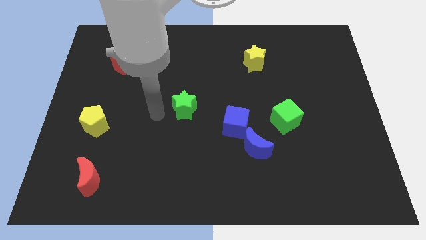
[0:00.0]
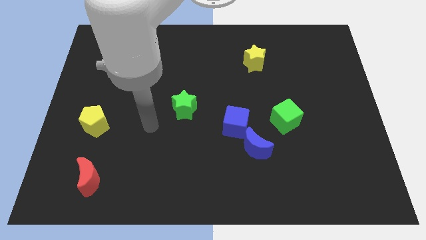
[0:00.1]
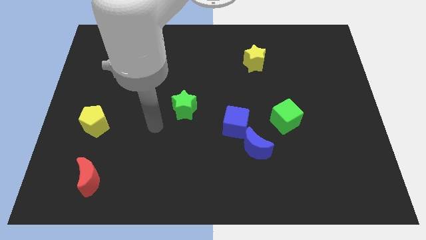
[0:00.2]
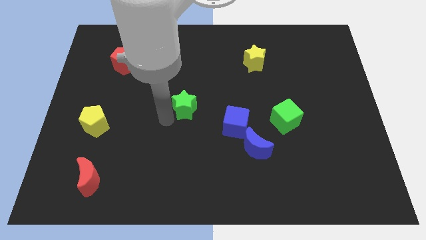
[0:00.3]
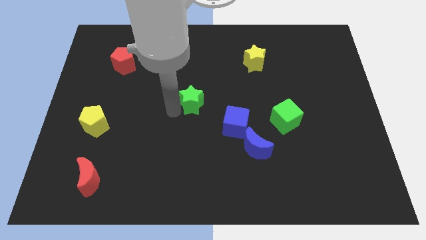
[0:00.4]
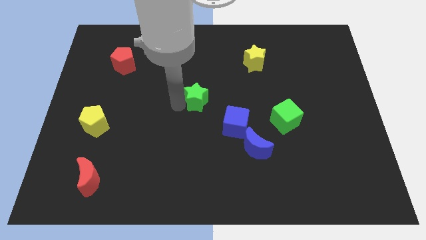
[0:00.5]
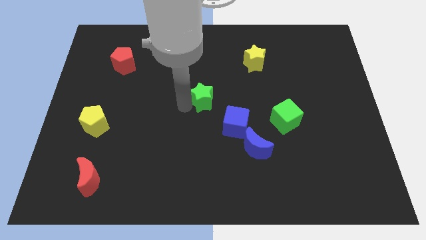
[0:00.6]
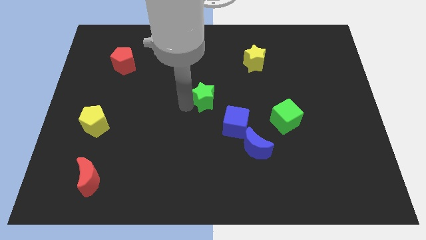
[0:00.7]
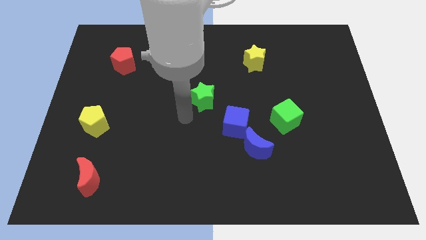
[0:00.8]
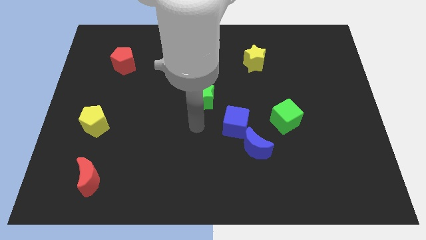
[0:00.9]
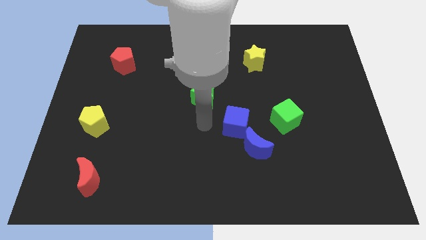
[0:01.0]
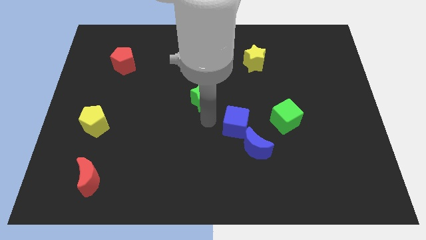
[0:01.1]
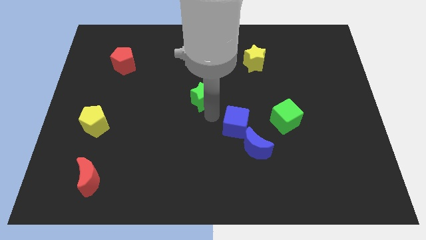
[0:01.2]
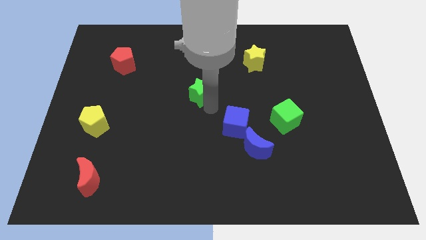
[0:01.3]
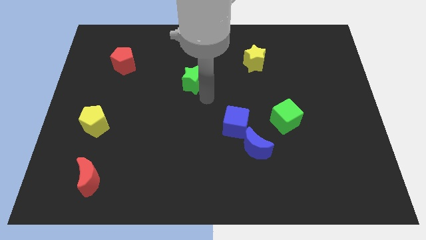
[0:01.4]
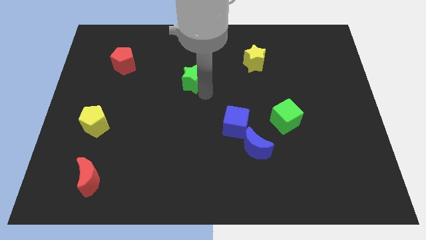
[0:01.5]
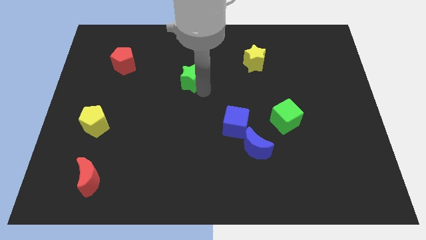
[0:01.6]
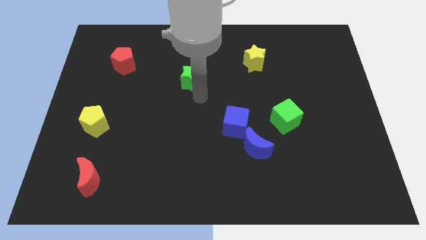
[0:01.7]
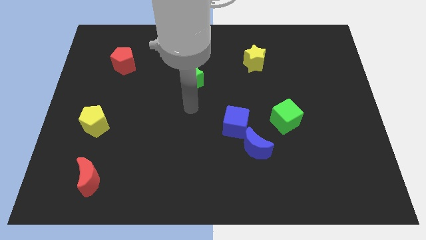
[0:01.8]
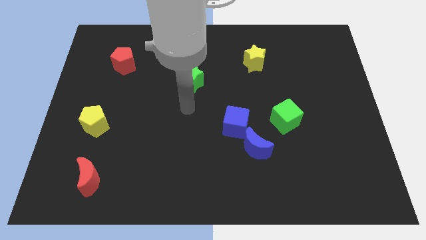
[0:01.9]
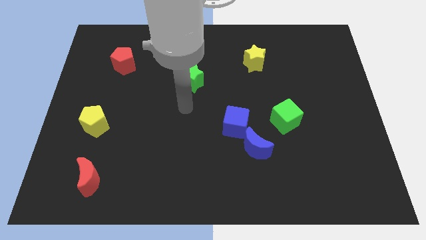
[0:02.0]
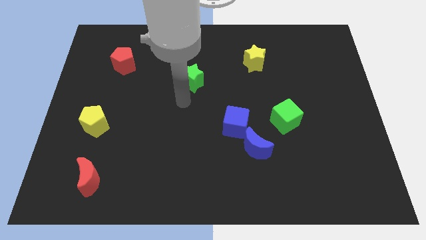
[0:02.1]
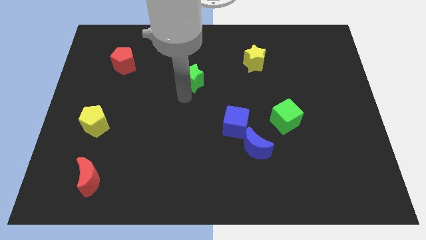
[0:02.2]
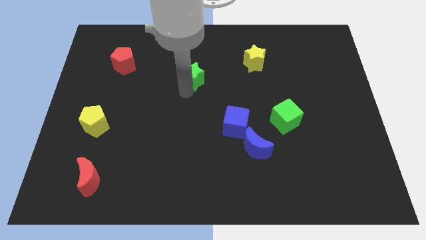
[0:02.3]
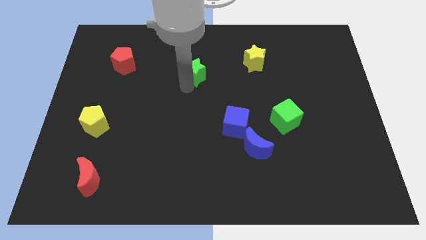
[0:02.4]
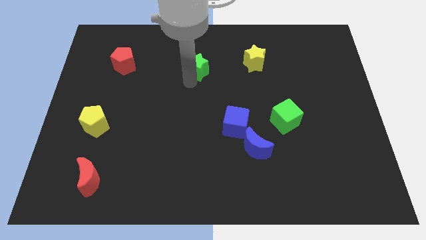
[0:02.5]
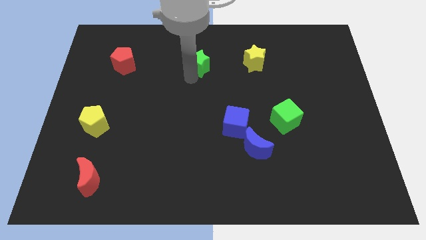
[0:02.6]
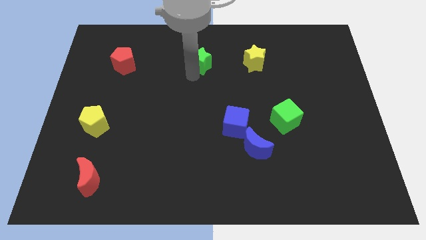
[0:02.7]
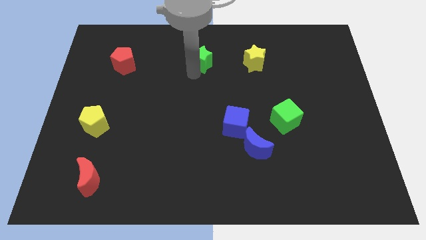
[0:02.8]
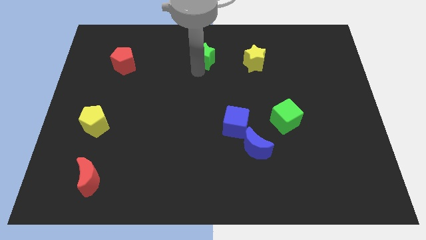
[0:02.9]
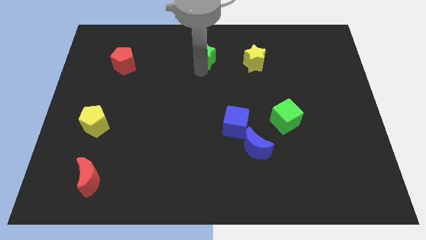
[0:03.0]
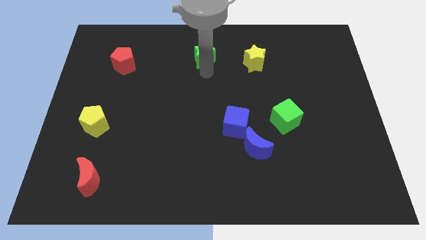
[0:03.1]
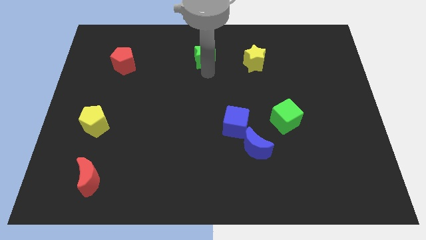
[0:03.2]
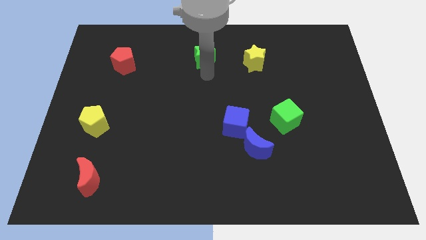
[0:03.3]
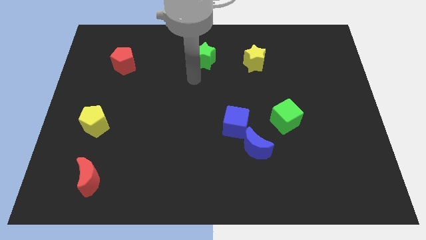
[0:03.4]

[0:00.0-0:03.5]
place the green star in between the yellow star and the red pentagon

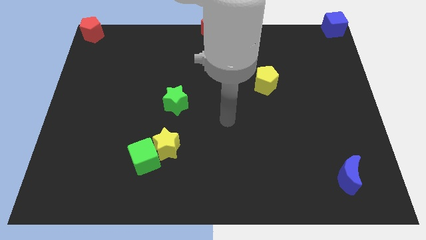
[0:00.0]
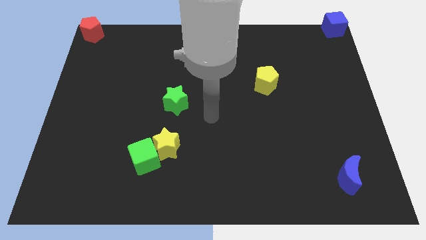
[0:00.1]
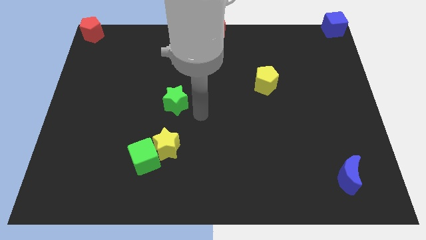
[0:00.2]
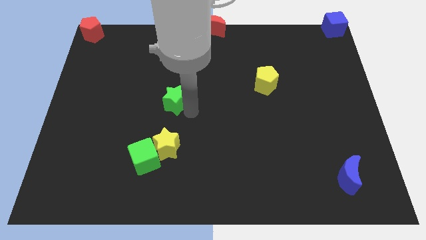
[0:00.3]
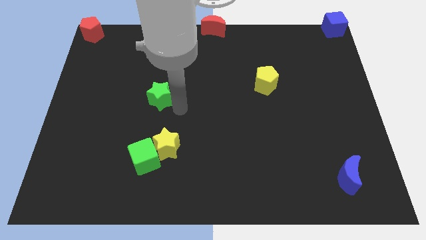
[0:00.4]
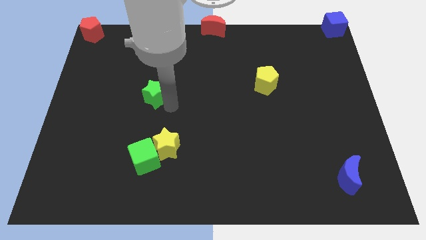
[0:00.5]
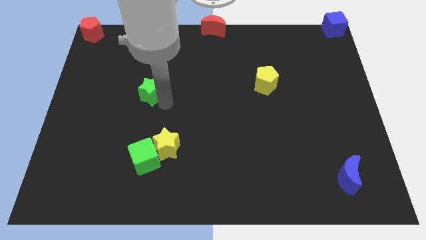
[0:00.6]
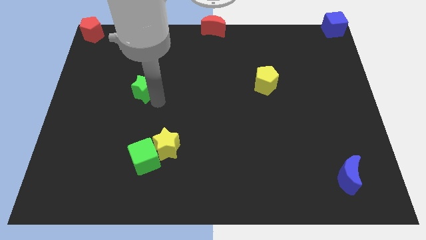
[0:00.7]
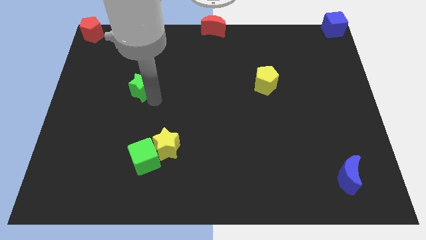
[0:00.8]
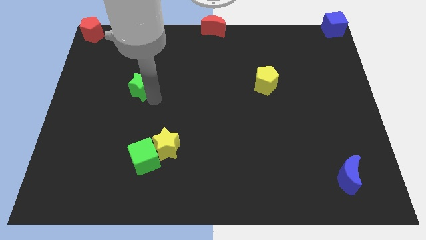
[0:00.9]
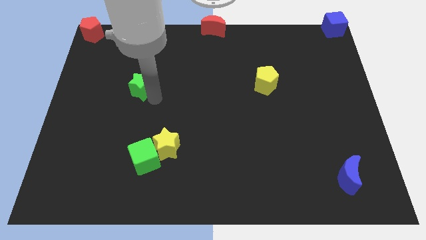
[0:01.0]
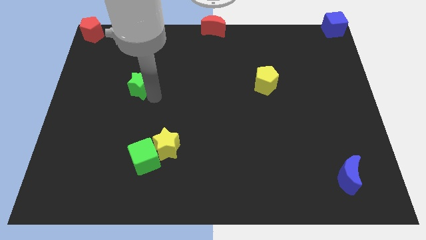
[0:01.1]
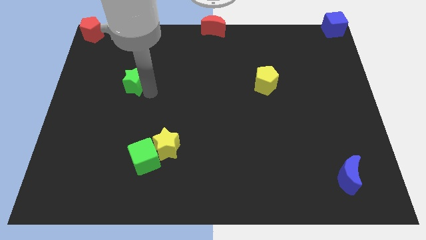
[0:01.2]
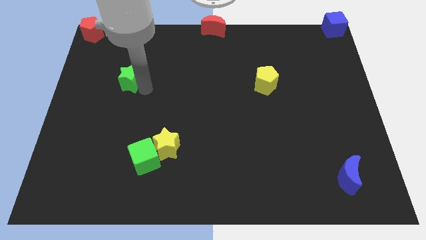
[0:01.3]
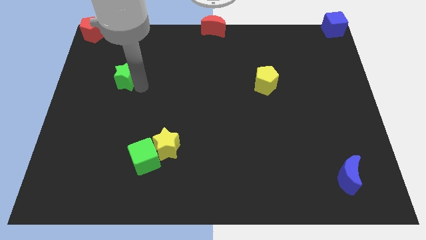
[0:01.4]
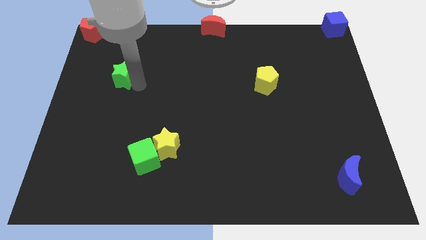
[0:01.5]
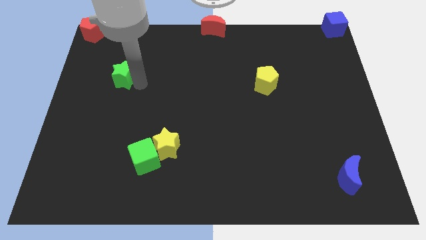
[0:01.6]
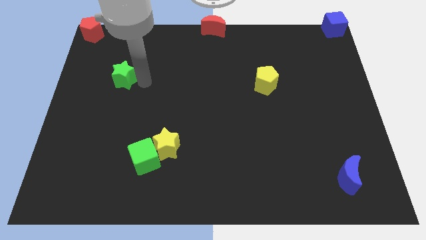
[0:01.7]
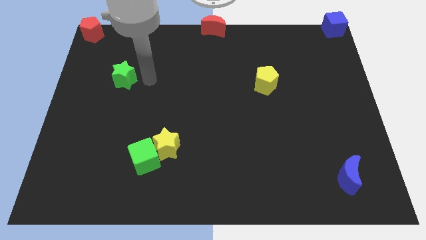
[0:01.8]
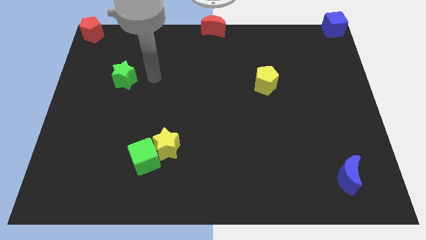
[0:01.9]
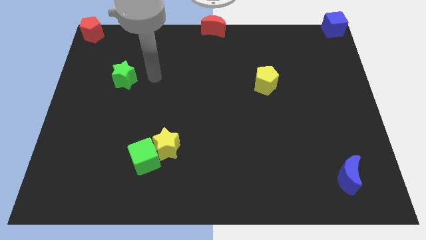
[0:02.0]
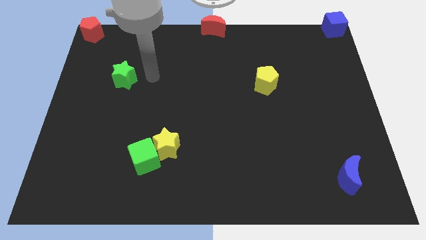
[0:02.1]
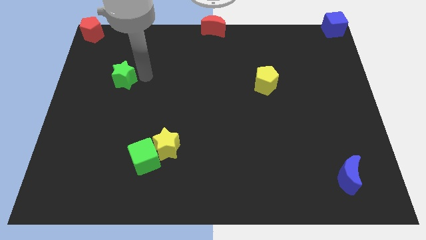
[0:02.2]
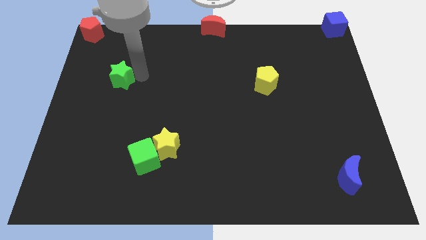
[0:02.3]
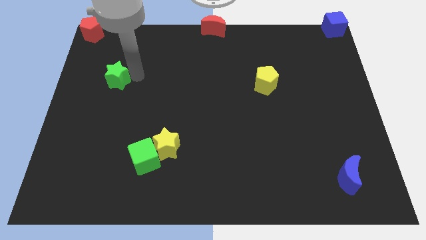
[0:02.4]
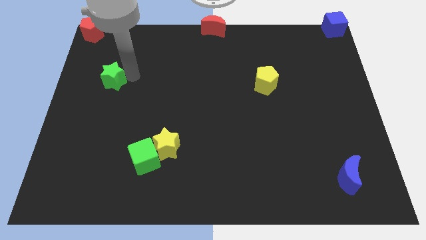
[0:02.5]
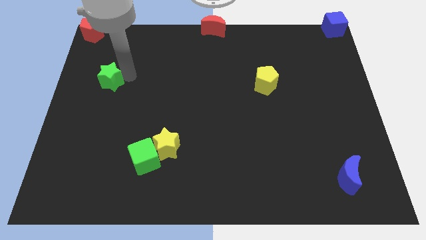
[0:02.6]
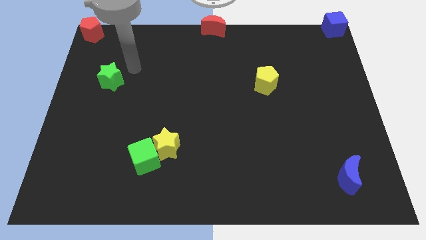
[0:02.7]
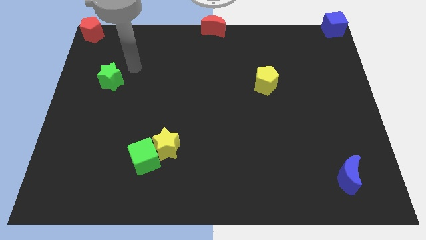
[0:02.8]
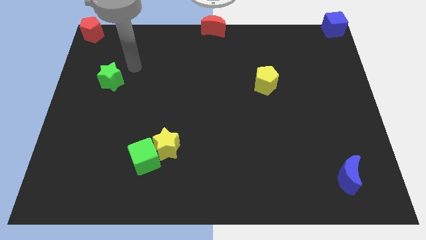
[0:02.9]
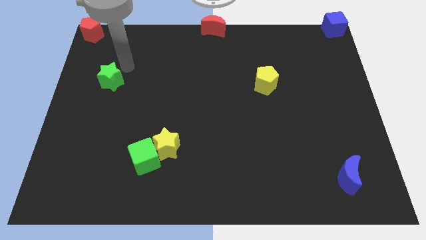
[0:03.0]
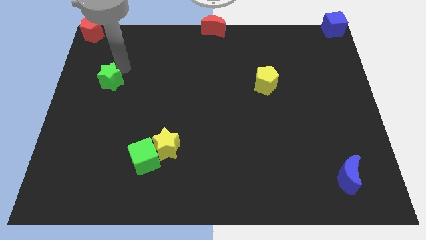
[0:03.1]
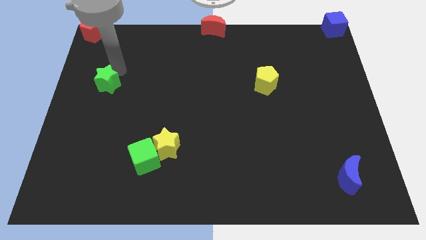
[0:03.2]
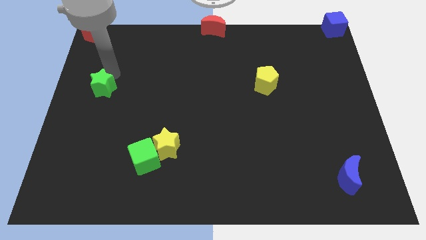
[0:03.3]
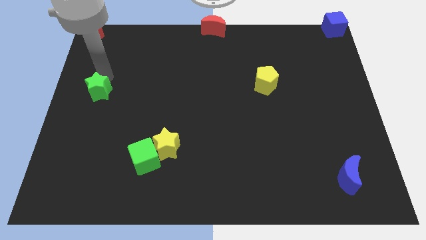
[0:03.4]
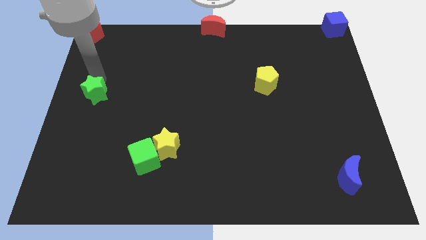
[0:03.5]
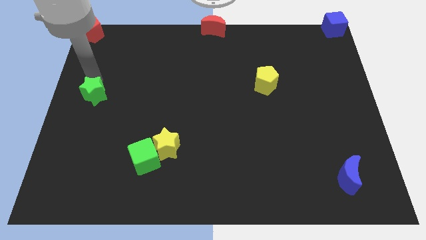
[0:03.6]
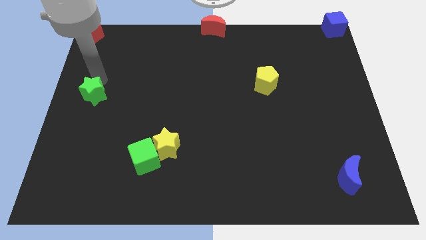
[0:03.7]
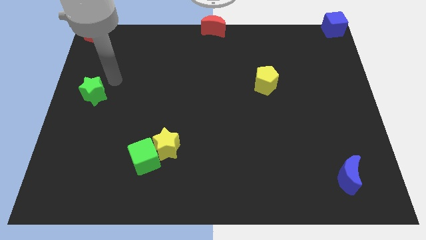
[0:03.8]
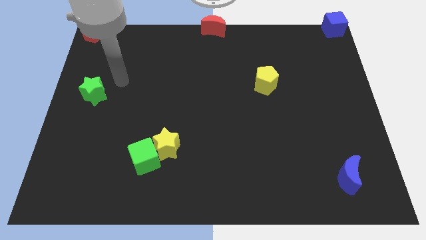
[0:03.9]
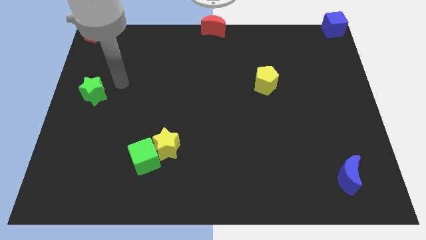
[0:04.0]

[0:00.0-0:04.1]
move green star towards center left

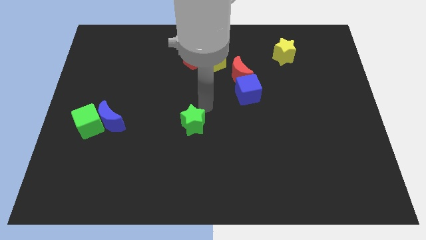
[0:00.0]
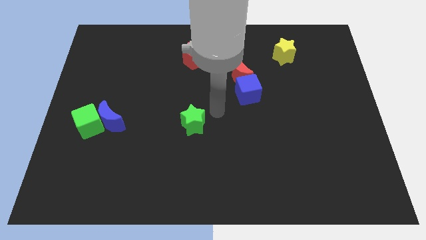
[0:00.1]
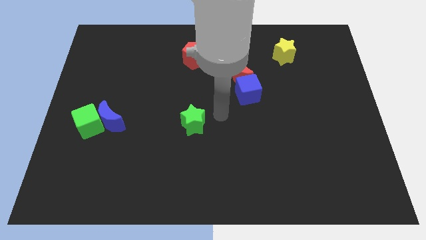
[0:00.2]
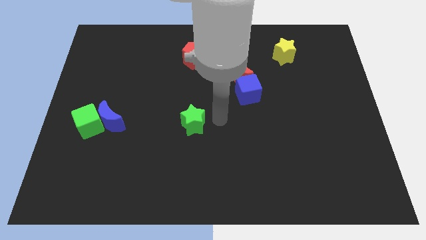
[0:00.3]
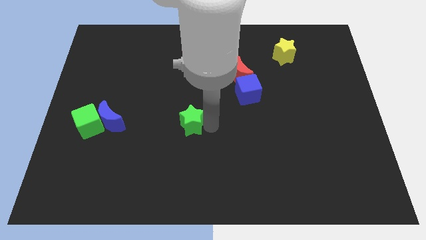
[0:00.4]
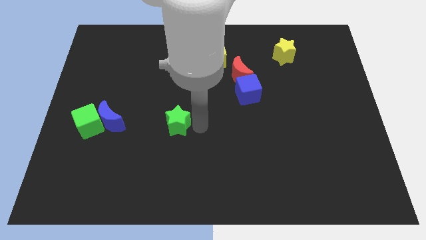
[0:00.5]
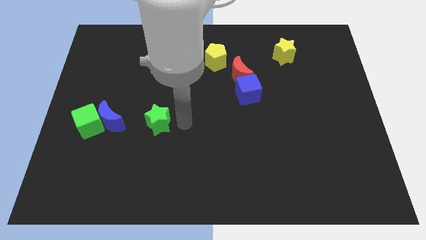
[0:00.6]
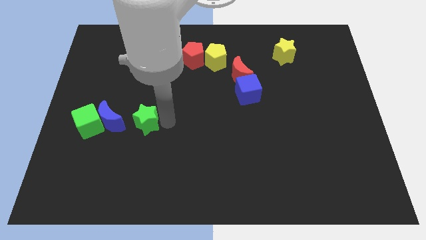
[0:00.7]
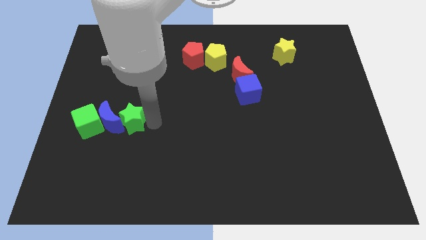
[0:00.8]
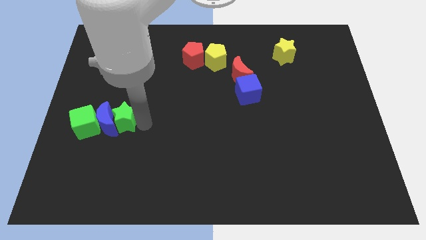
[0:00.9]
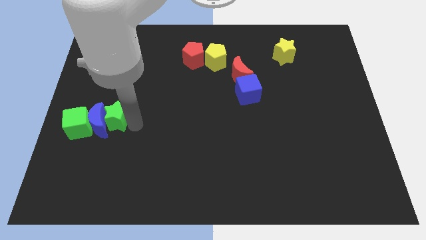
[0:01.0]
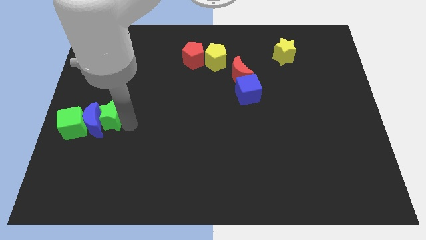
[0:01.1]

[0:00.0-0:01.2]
move the green star into the right side of the blue crescent

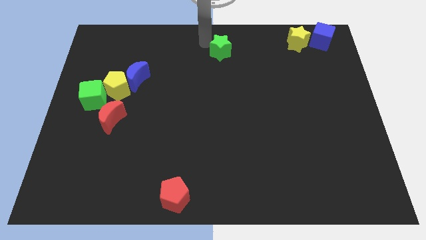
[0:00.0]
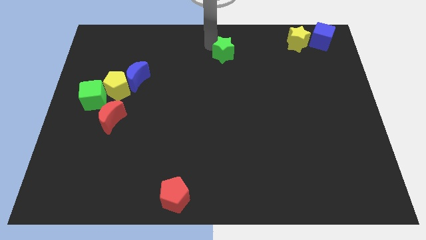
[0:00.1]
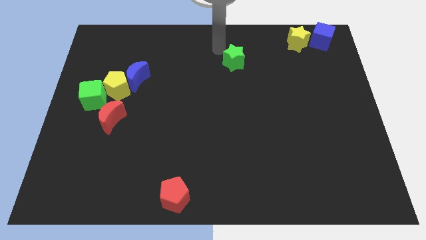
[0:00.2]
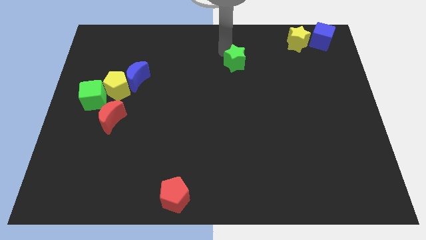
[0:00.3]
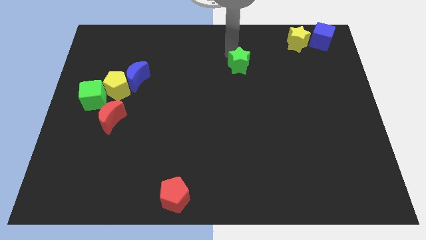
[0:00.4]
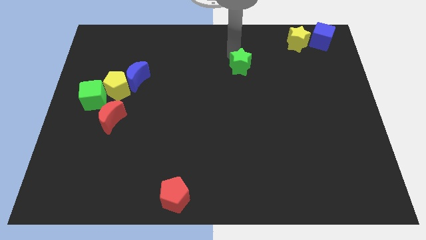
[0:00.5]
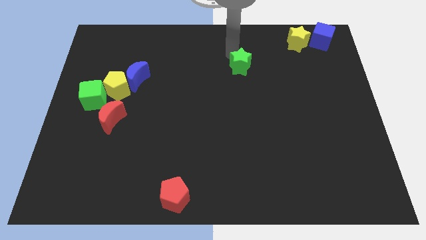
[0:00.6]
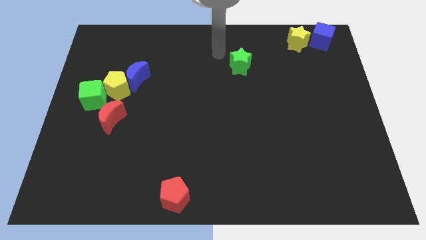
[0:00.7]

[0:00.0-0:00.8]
push green star slightly down
